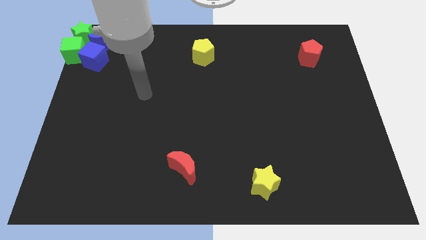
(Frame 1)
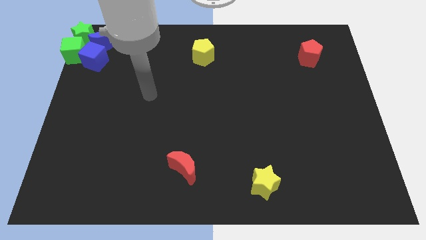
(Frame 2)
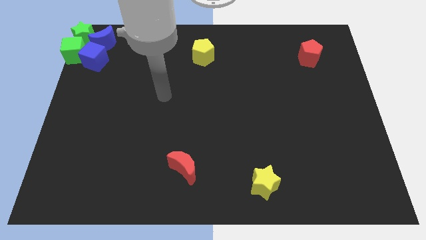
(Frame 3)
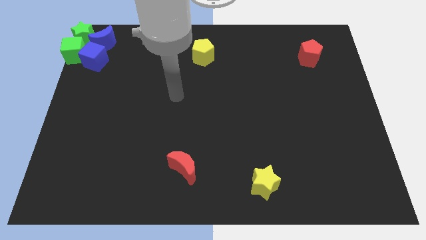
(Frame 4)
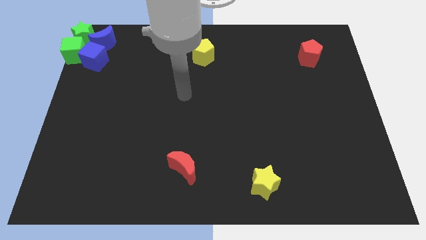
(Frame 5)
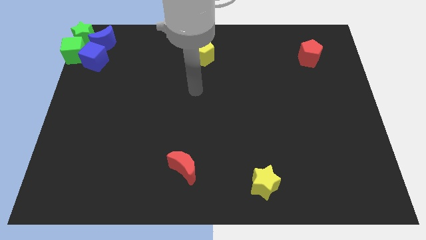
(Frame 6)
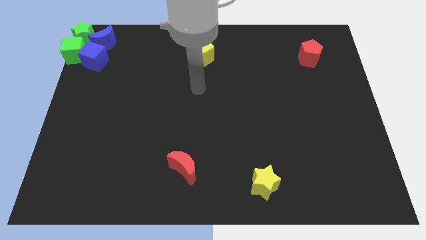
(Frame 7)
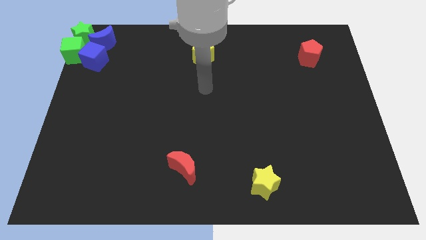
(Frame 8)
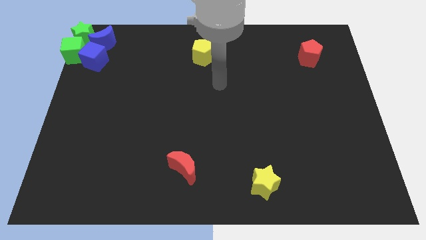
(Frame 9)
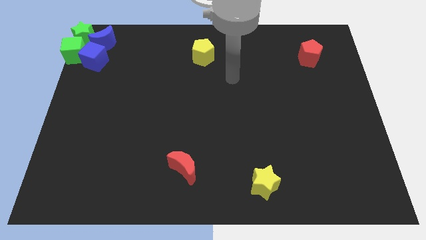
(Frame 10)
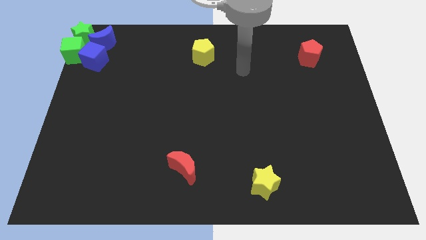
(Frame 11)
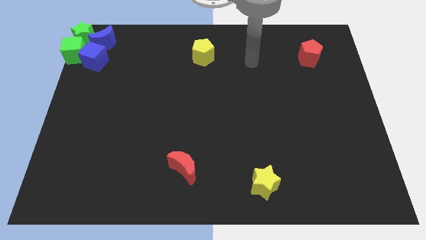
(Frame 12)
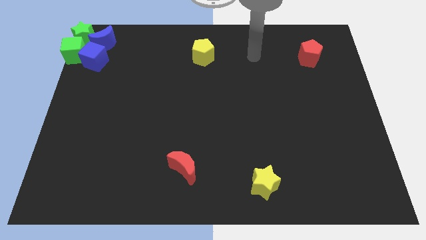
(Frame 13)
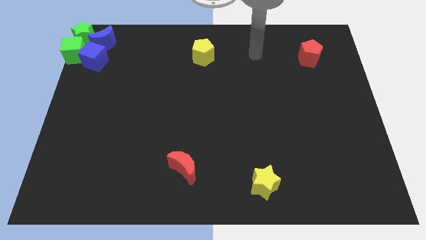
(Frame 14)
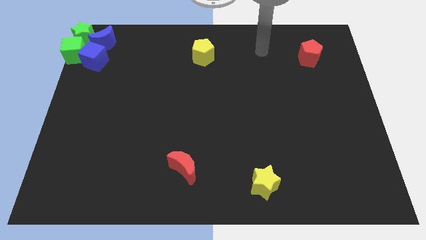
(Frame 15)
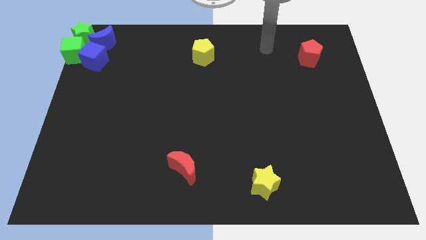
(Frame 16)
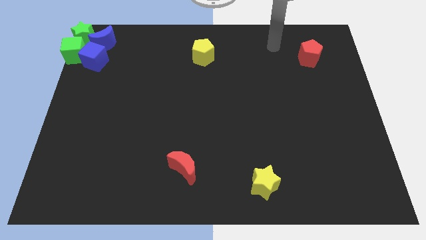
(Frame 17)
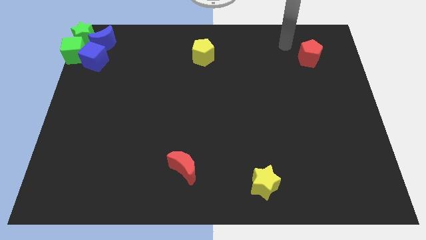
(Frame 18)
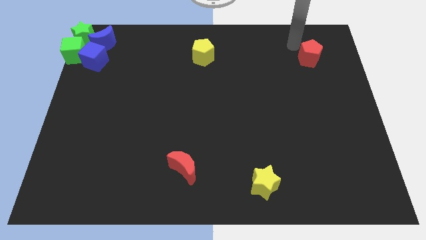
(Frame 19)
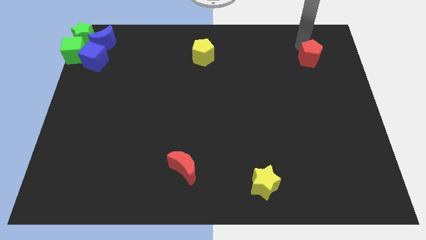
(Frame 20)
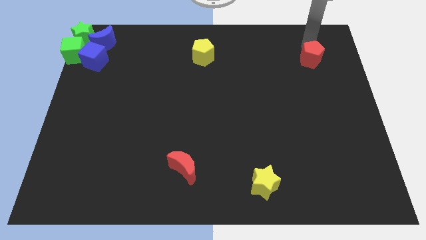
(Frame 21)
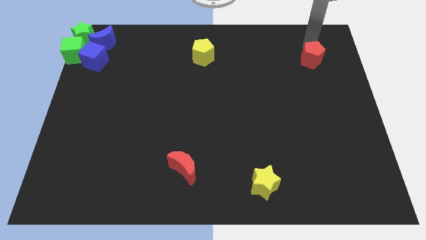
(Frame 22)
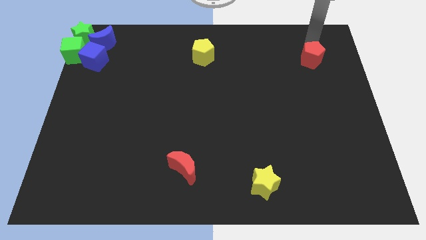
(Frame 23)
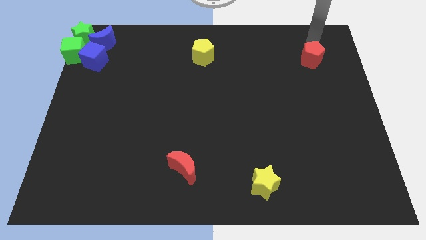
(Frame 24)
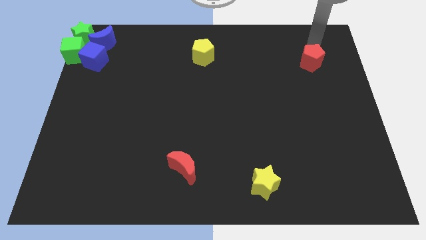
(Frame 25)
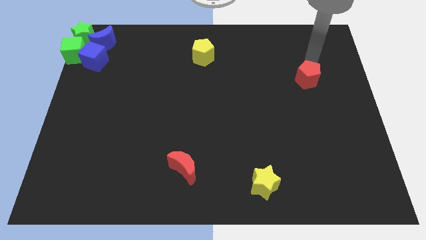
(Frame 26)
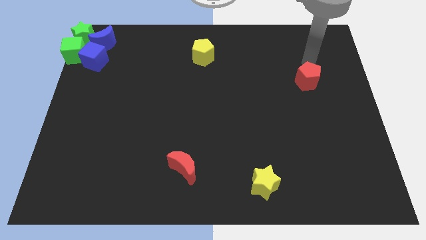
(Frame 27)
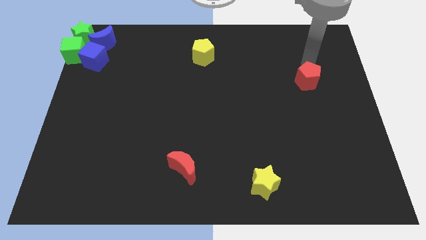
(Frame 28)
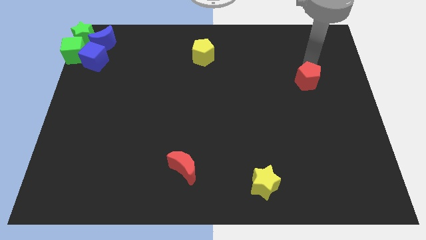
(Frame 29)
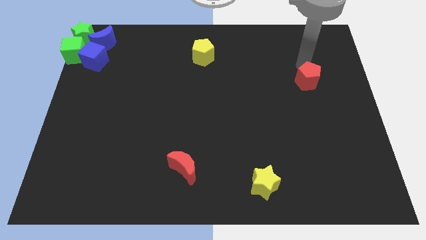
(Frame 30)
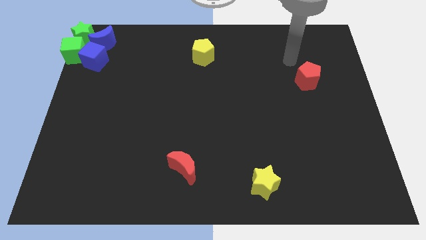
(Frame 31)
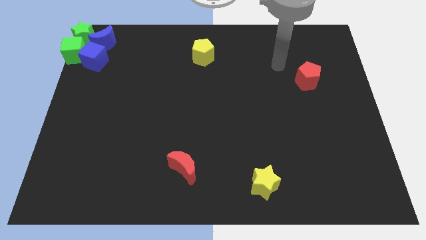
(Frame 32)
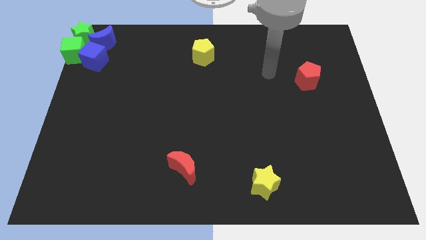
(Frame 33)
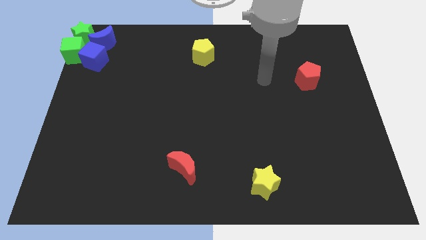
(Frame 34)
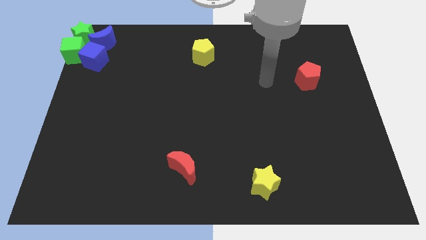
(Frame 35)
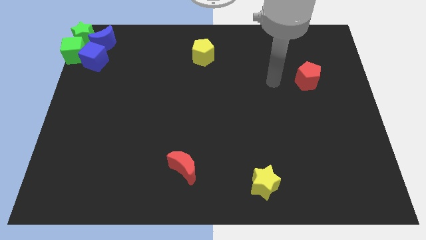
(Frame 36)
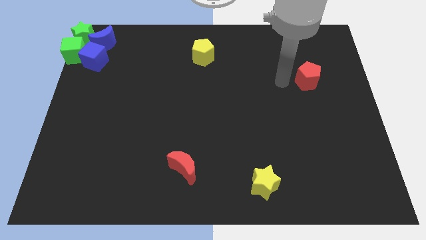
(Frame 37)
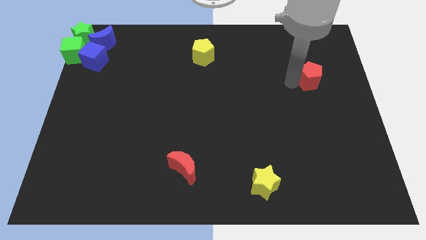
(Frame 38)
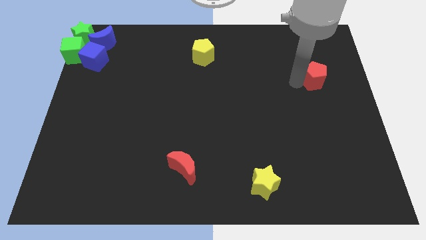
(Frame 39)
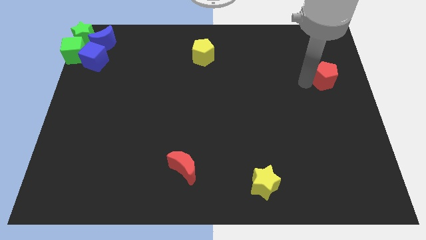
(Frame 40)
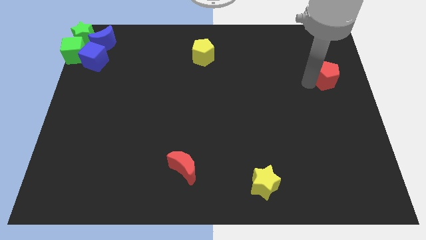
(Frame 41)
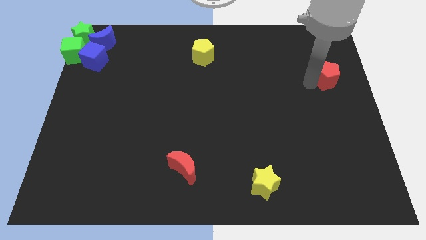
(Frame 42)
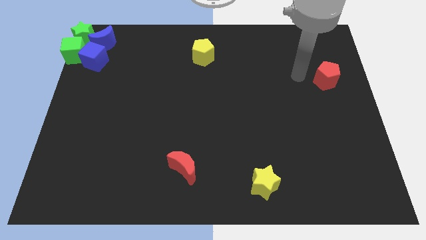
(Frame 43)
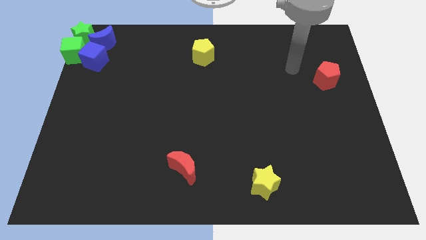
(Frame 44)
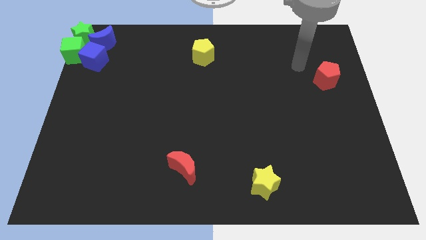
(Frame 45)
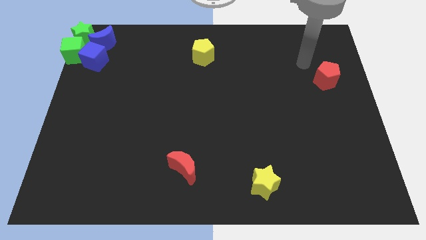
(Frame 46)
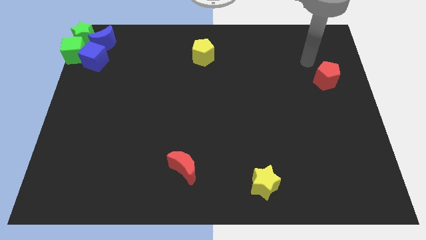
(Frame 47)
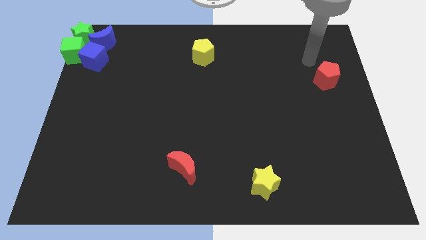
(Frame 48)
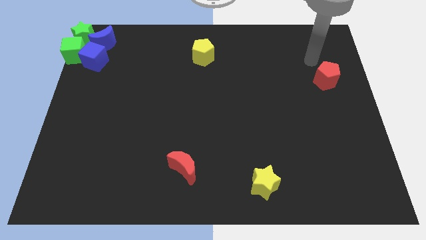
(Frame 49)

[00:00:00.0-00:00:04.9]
move the red pentagon slightly to the bottom right of the board

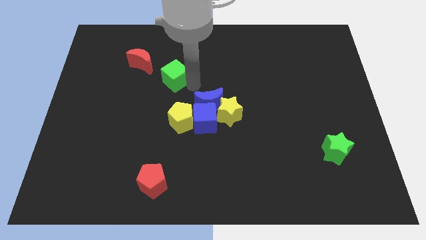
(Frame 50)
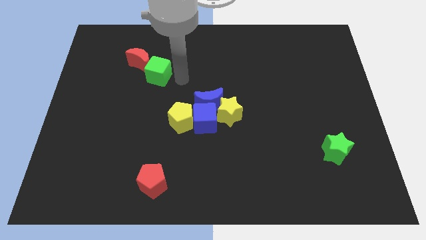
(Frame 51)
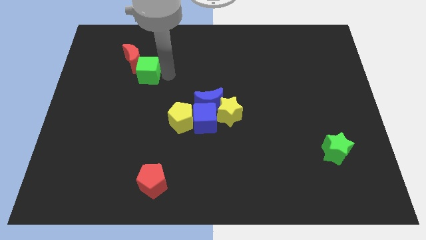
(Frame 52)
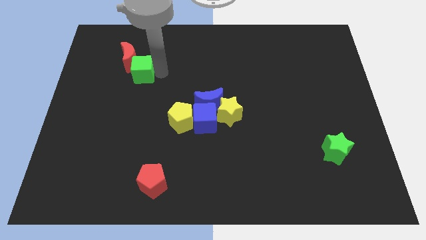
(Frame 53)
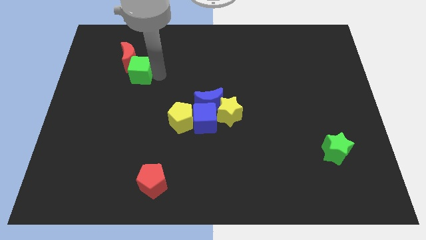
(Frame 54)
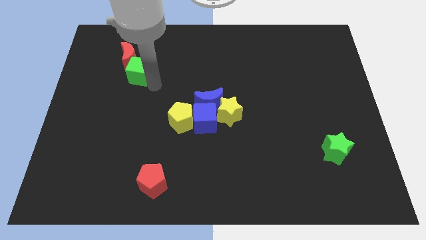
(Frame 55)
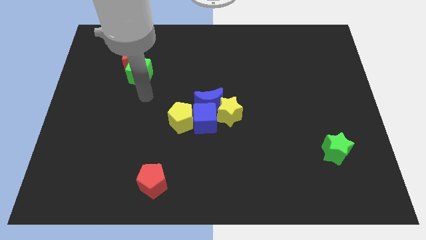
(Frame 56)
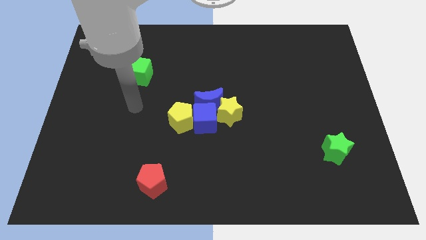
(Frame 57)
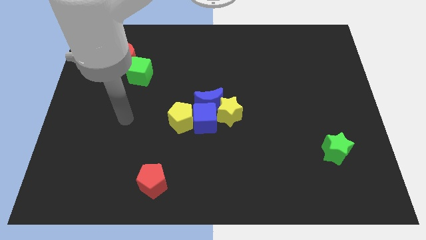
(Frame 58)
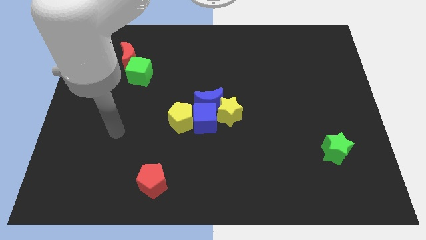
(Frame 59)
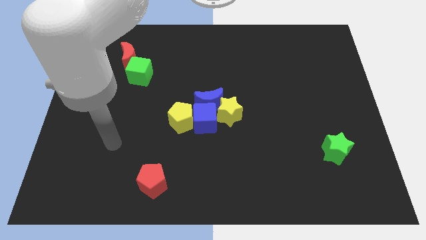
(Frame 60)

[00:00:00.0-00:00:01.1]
push the green cube into the red crescent

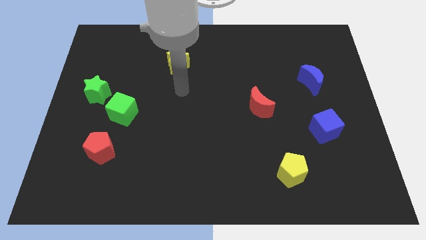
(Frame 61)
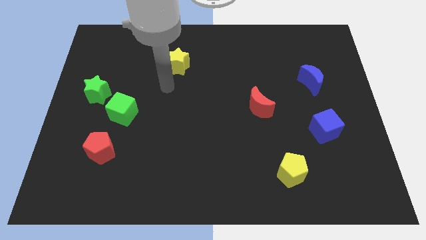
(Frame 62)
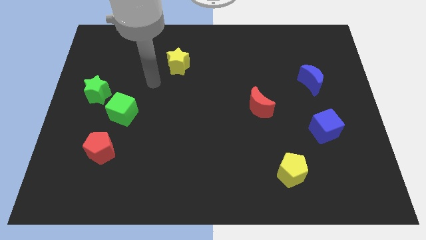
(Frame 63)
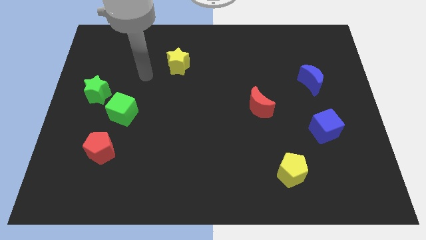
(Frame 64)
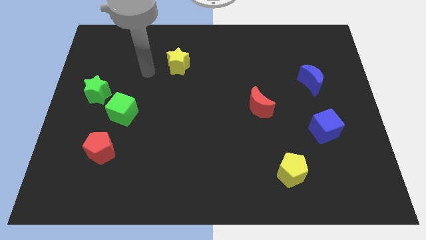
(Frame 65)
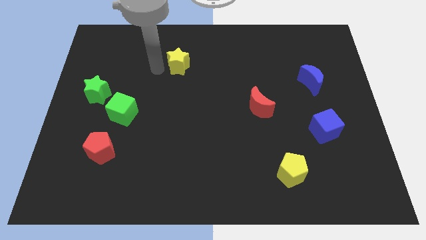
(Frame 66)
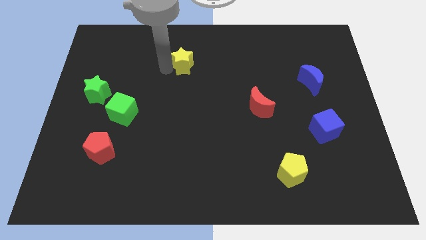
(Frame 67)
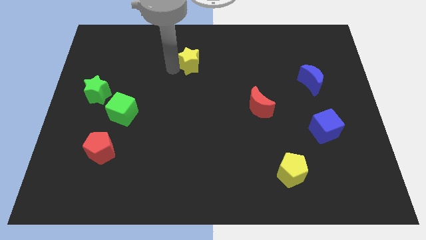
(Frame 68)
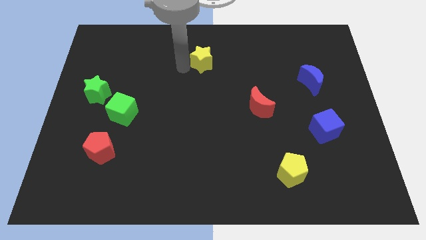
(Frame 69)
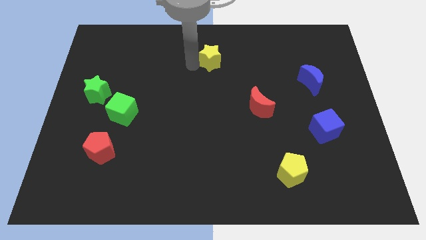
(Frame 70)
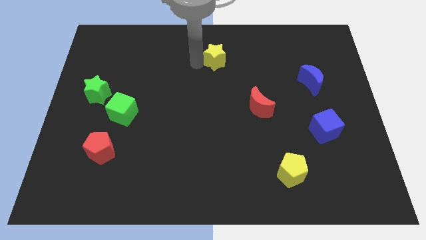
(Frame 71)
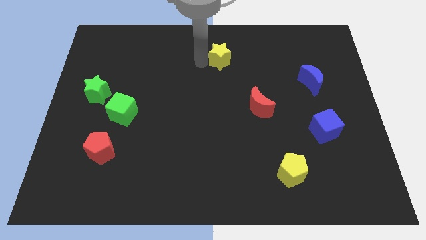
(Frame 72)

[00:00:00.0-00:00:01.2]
push the yellow star to the right

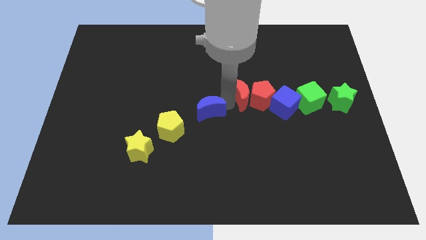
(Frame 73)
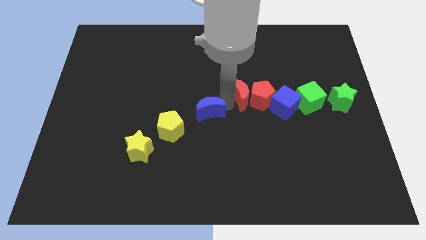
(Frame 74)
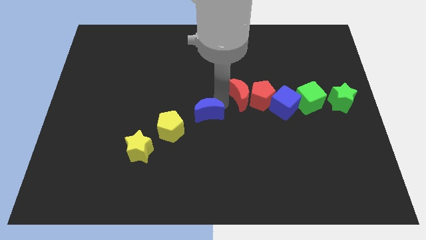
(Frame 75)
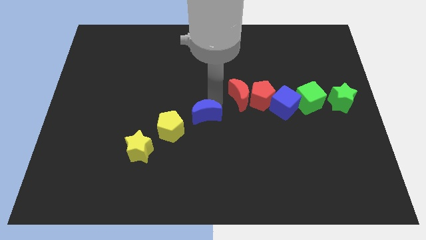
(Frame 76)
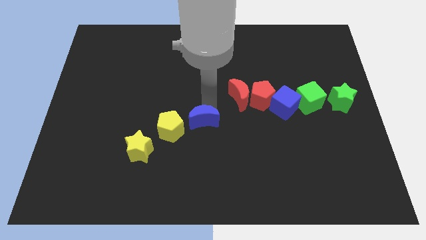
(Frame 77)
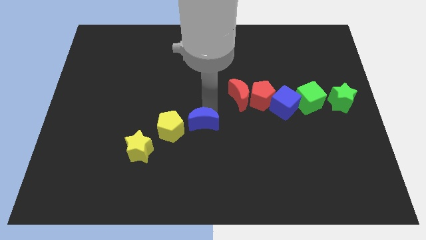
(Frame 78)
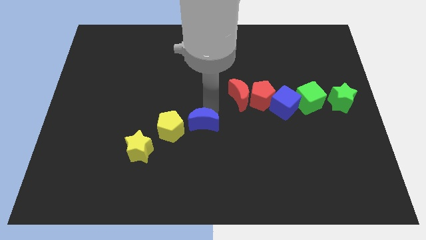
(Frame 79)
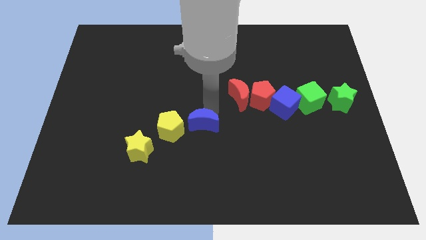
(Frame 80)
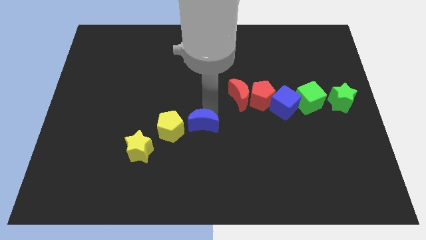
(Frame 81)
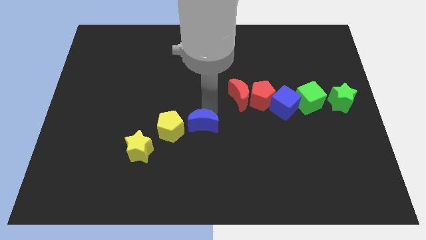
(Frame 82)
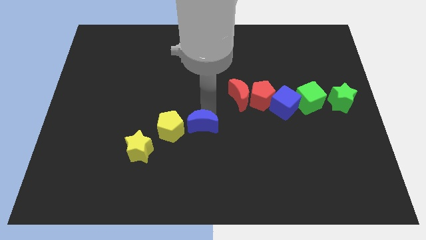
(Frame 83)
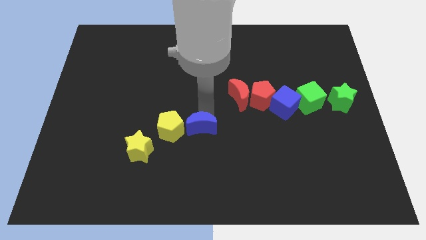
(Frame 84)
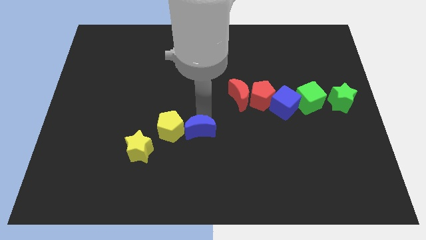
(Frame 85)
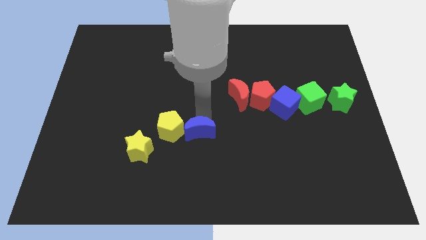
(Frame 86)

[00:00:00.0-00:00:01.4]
move the blue moon close to the right side of the yellow pentagon

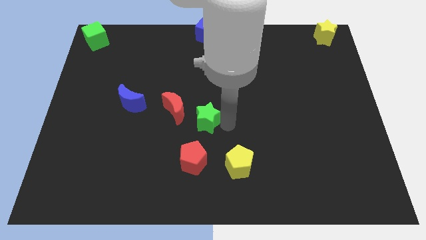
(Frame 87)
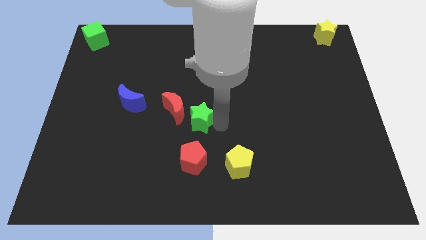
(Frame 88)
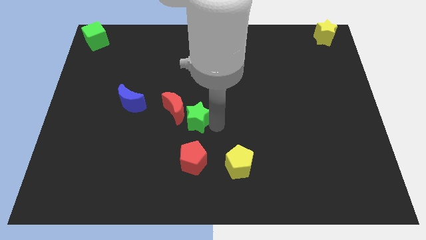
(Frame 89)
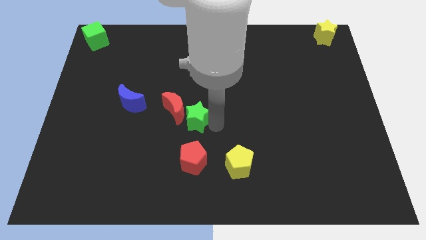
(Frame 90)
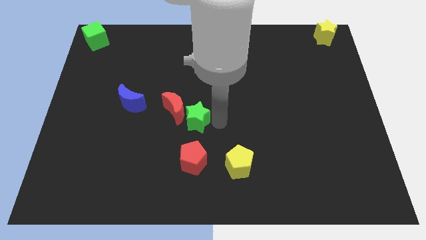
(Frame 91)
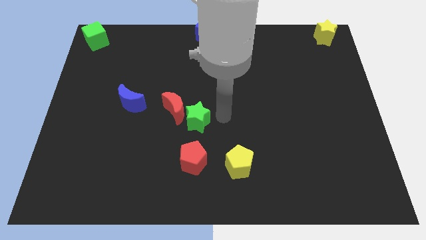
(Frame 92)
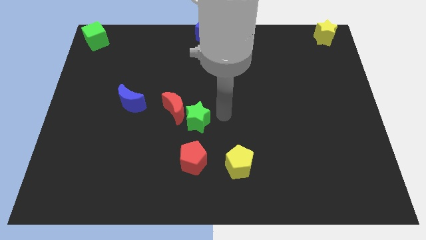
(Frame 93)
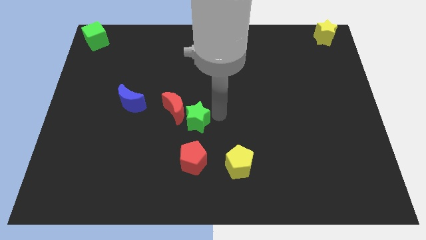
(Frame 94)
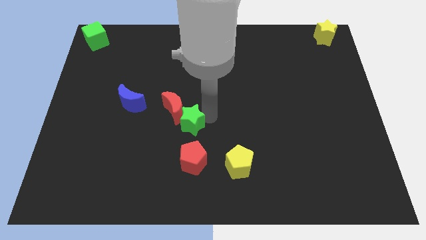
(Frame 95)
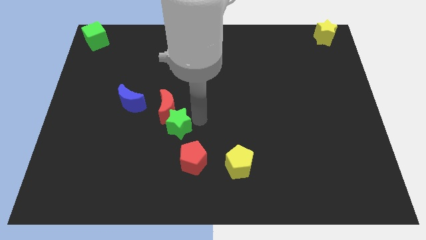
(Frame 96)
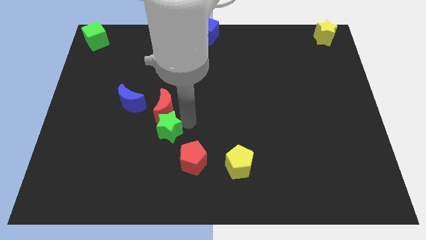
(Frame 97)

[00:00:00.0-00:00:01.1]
push the green star into the red moon
